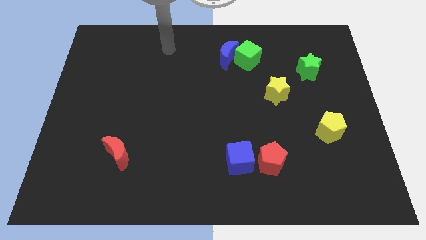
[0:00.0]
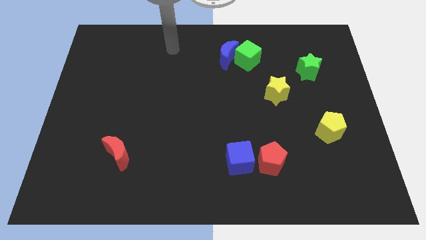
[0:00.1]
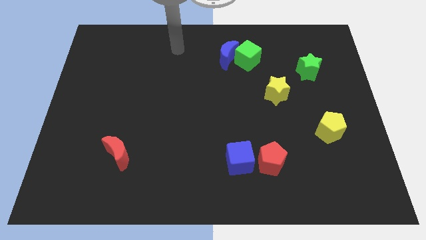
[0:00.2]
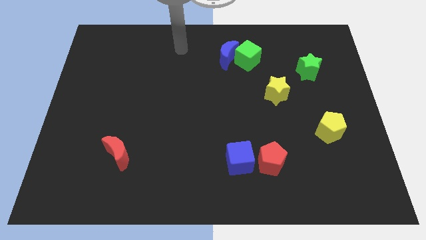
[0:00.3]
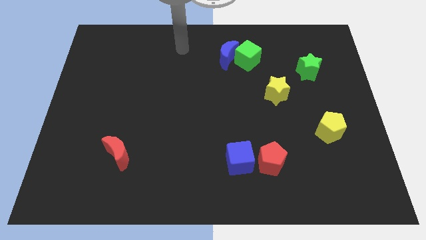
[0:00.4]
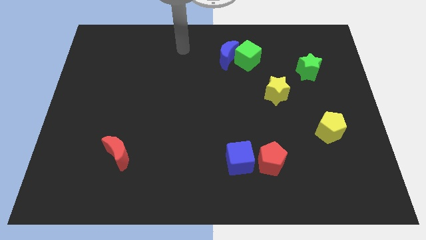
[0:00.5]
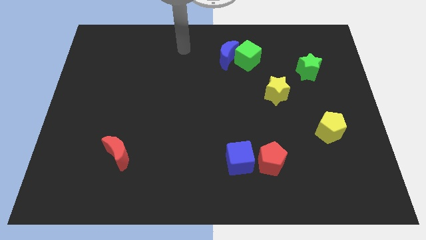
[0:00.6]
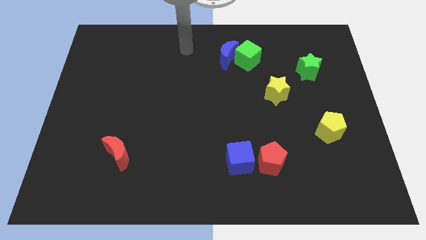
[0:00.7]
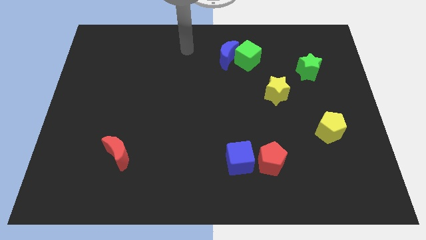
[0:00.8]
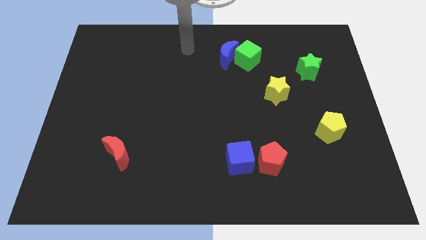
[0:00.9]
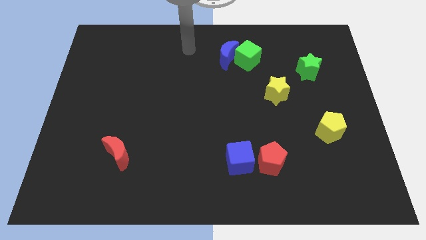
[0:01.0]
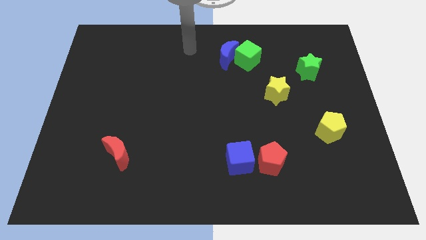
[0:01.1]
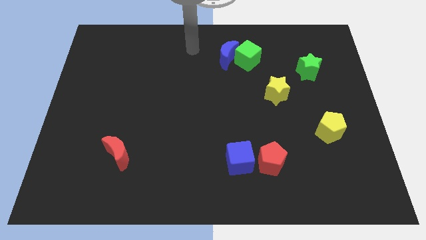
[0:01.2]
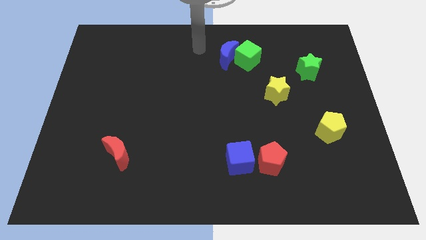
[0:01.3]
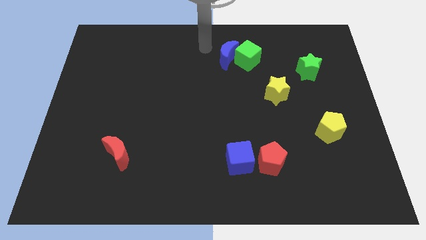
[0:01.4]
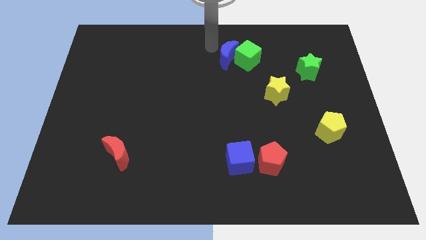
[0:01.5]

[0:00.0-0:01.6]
move your arm to the top center of the board

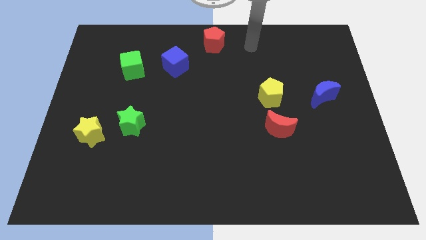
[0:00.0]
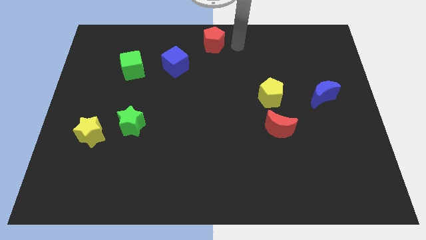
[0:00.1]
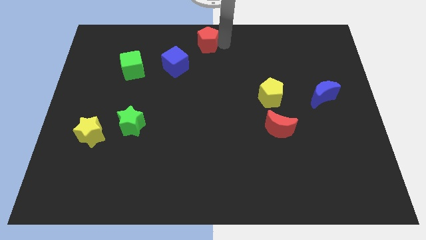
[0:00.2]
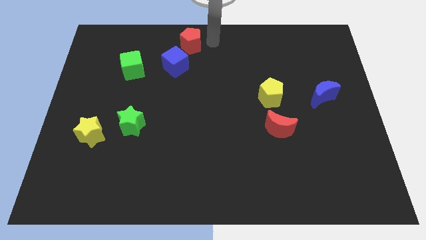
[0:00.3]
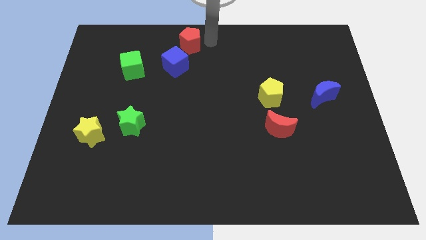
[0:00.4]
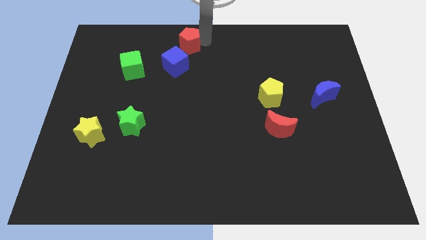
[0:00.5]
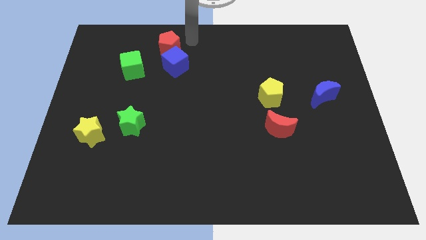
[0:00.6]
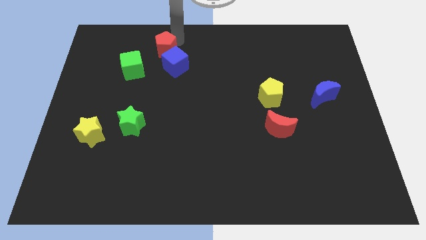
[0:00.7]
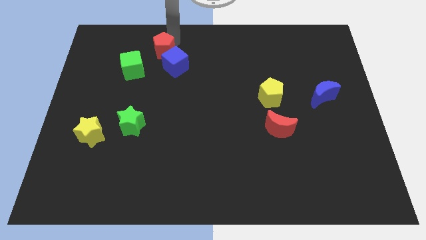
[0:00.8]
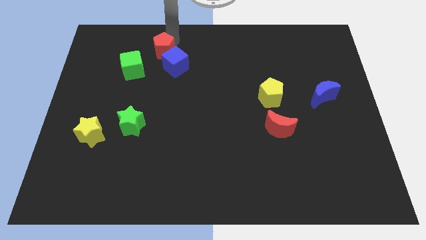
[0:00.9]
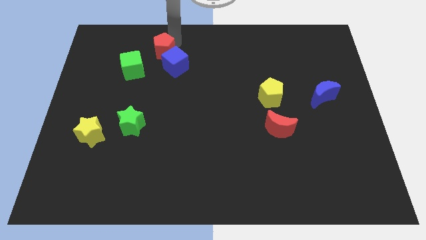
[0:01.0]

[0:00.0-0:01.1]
slide red pentagon to the top left of blue cube

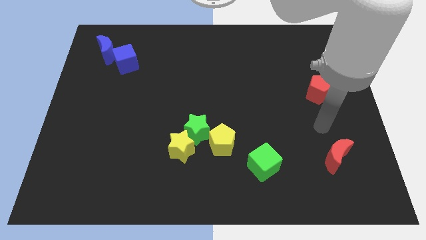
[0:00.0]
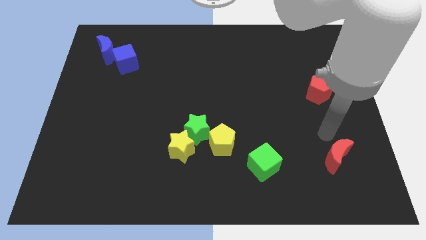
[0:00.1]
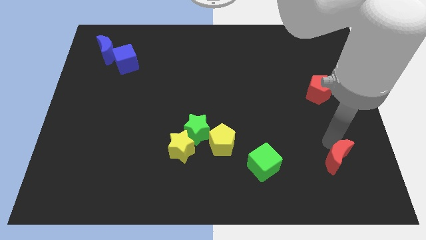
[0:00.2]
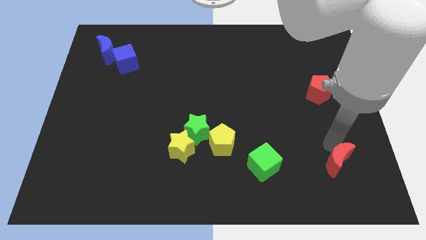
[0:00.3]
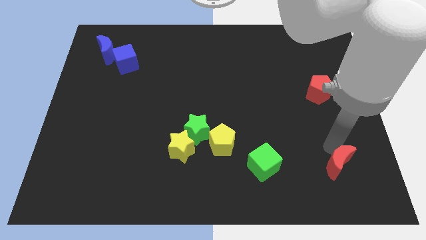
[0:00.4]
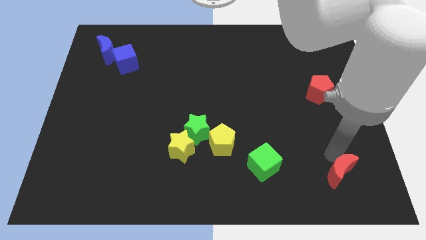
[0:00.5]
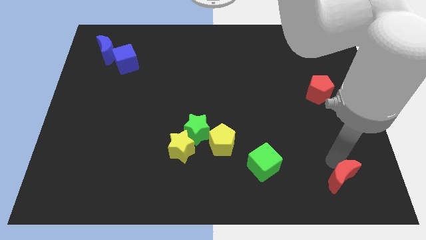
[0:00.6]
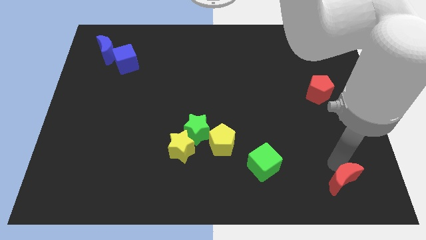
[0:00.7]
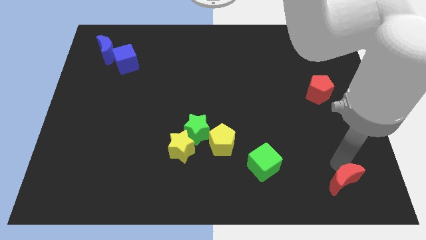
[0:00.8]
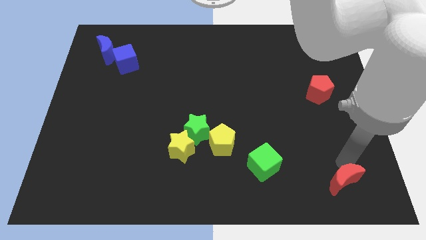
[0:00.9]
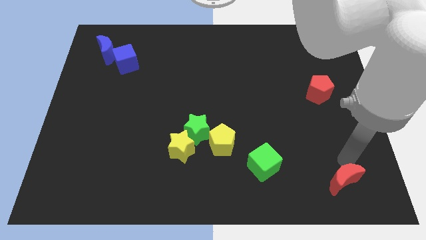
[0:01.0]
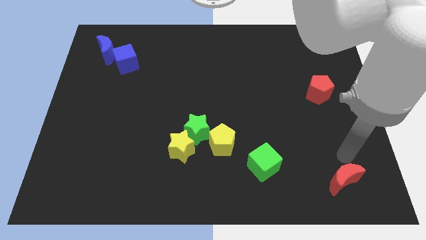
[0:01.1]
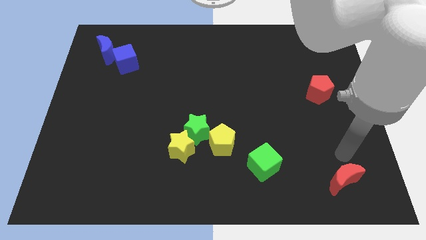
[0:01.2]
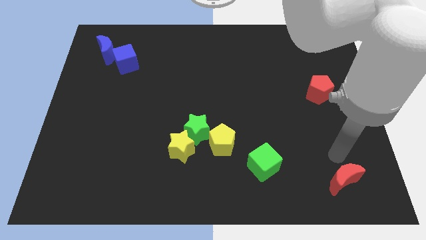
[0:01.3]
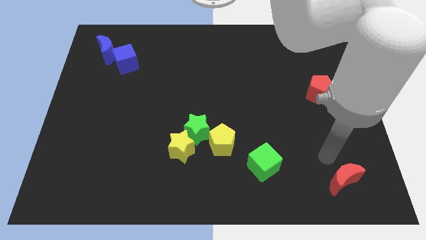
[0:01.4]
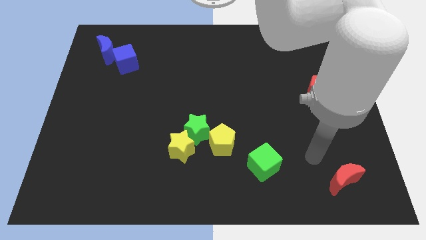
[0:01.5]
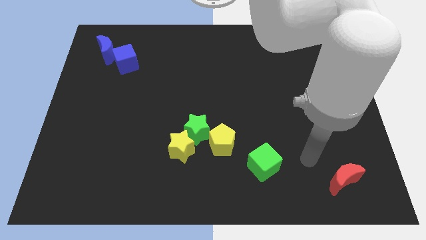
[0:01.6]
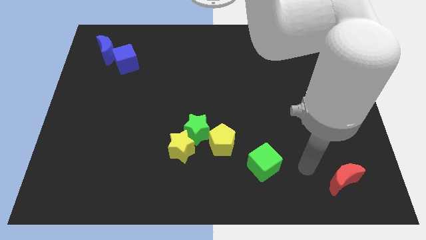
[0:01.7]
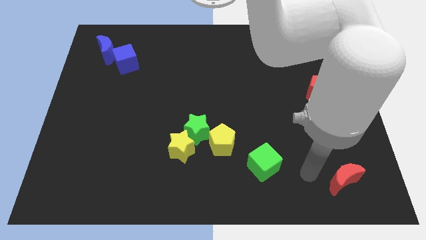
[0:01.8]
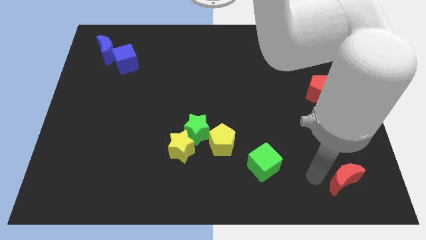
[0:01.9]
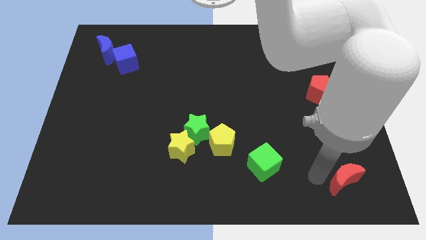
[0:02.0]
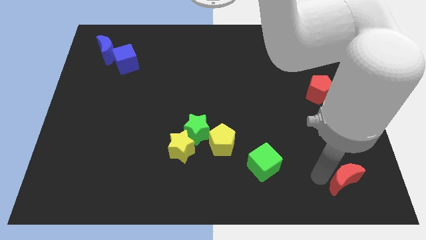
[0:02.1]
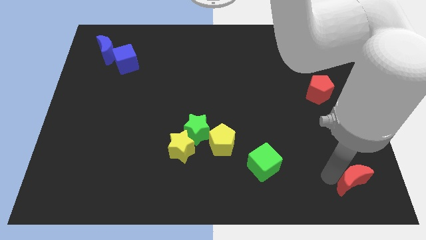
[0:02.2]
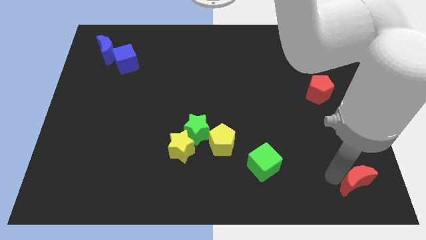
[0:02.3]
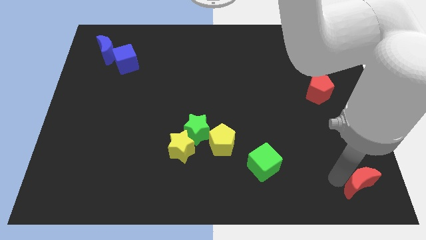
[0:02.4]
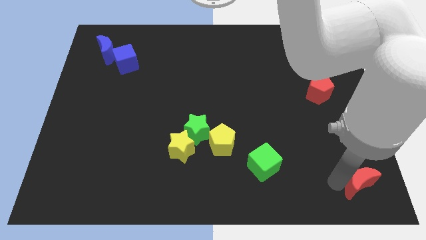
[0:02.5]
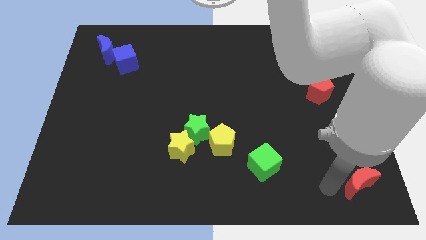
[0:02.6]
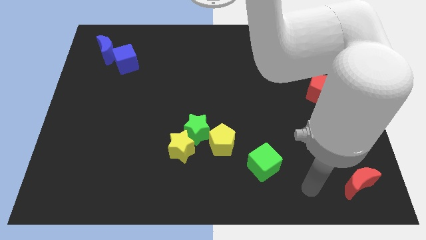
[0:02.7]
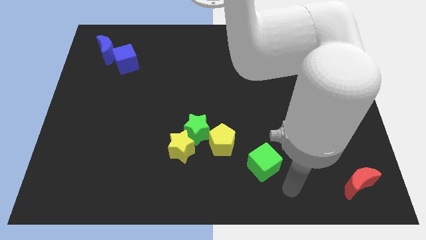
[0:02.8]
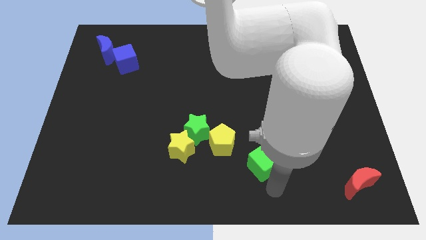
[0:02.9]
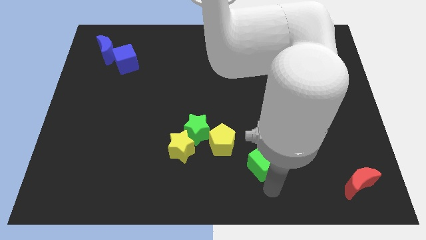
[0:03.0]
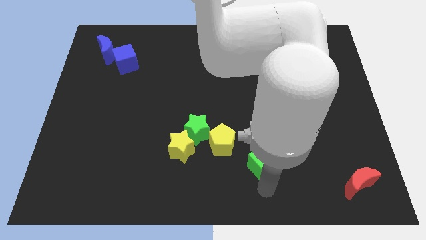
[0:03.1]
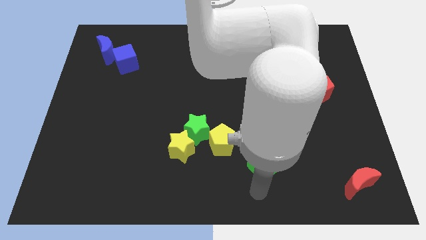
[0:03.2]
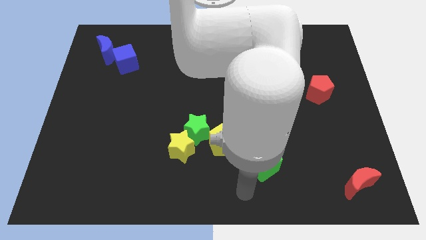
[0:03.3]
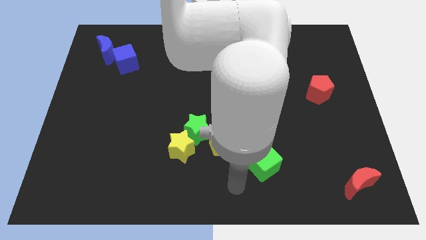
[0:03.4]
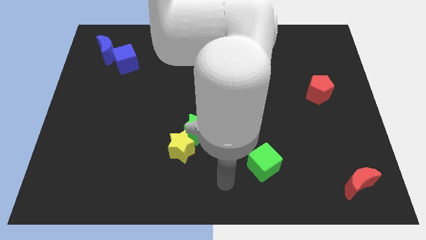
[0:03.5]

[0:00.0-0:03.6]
move the red crescent to the bottom right of the board

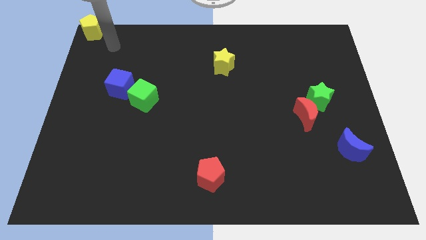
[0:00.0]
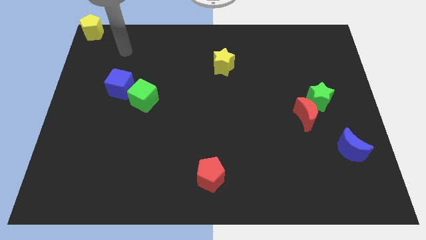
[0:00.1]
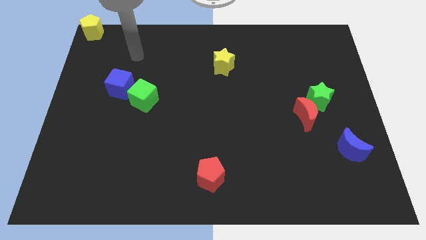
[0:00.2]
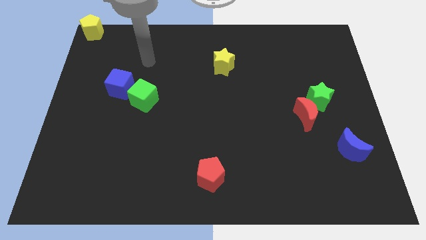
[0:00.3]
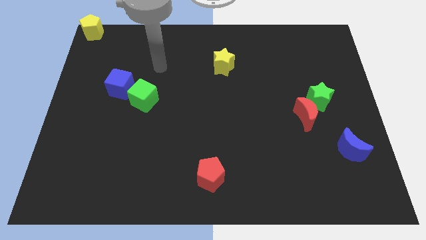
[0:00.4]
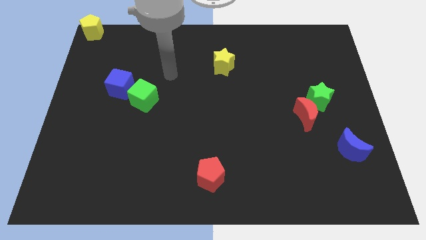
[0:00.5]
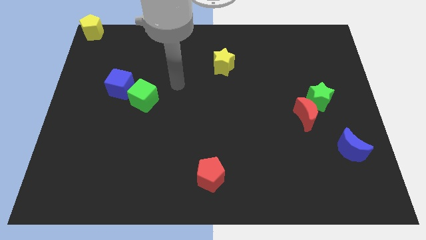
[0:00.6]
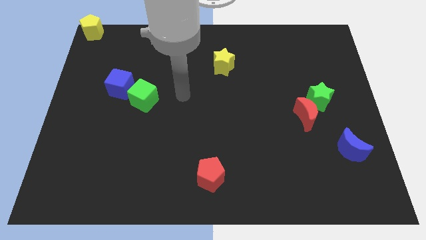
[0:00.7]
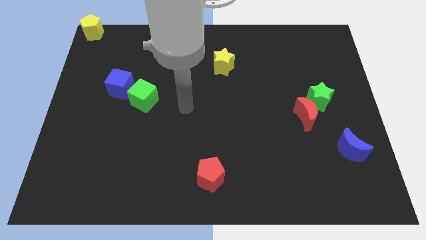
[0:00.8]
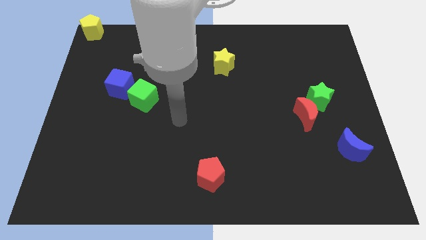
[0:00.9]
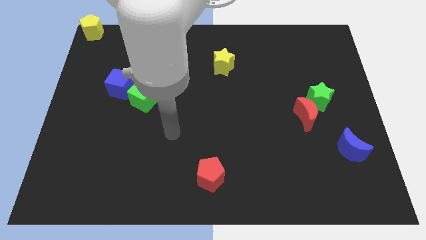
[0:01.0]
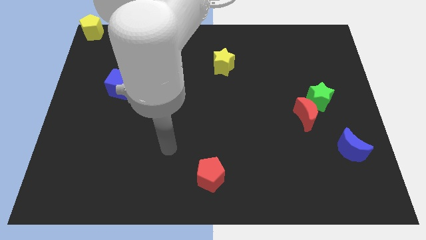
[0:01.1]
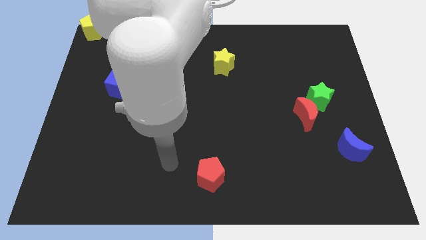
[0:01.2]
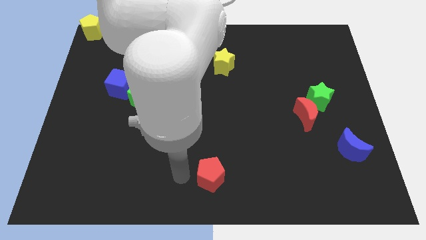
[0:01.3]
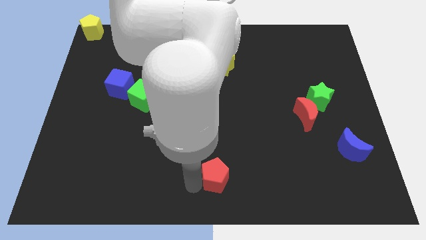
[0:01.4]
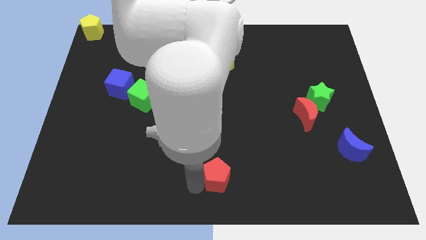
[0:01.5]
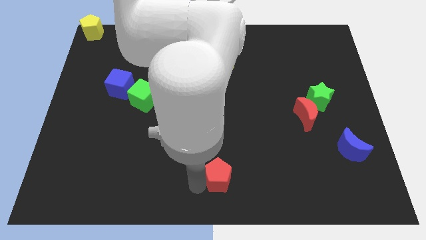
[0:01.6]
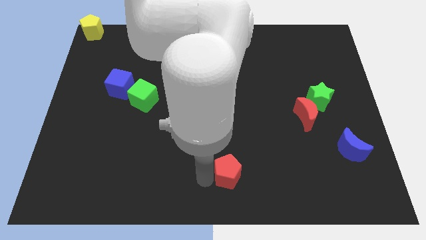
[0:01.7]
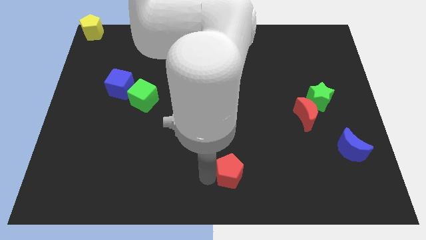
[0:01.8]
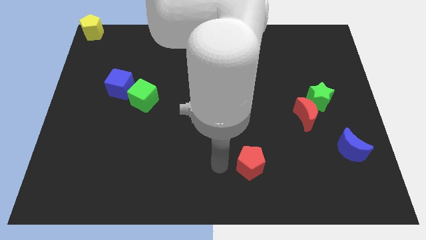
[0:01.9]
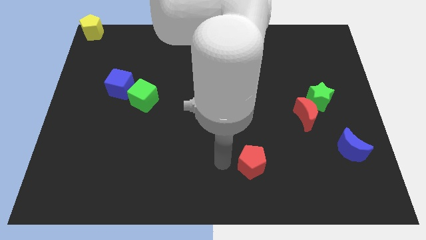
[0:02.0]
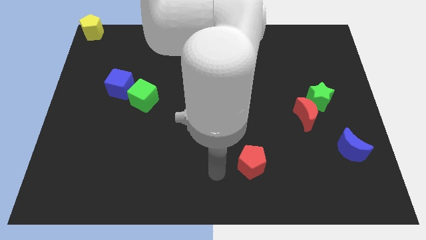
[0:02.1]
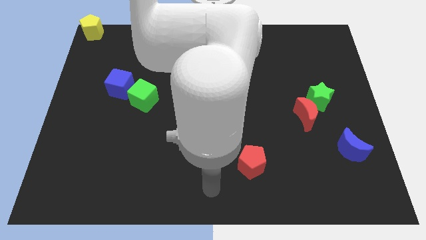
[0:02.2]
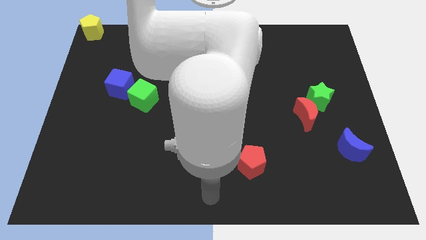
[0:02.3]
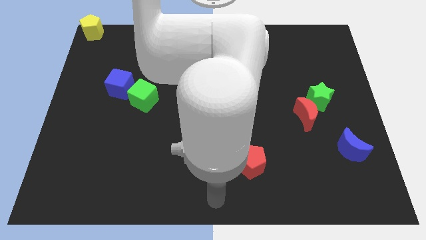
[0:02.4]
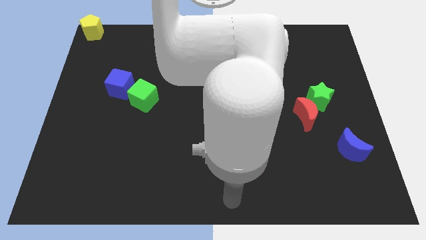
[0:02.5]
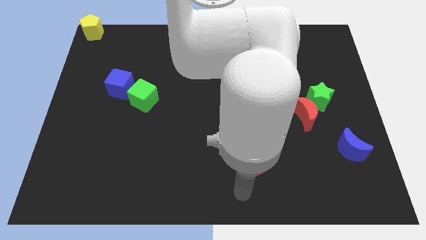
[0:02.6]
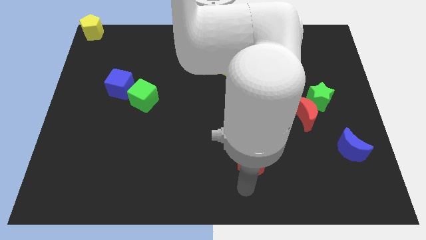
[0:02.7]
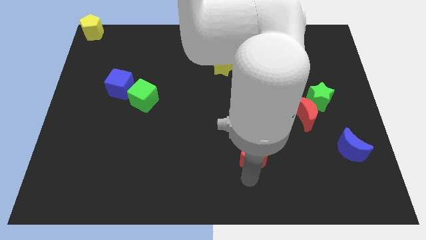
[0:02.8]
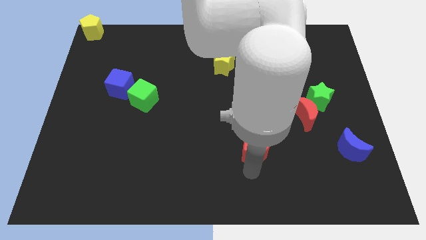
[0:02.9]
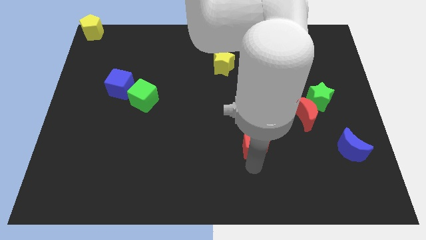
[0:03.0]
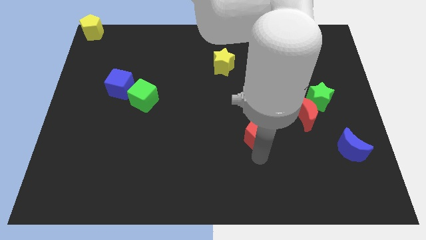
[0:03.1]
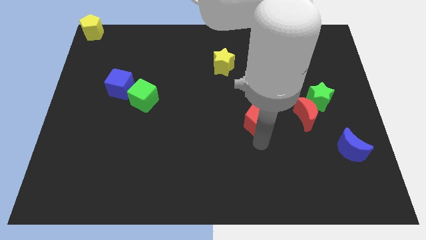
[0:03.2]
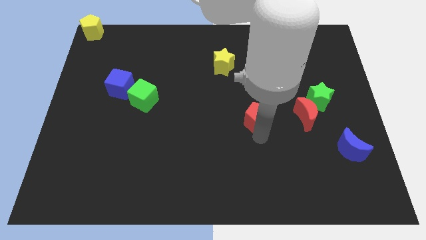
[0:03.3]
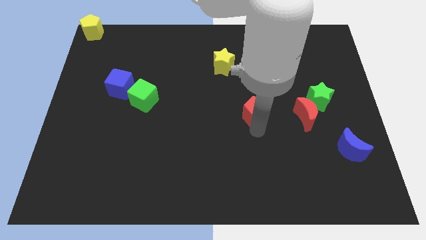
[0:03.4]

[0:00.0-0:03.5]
place red pentagon to the left of red moon
